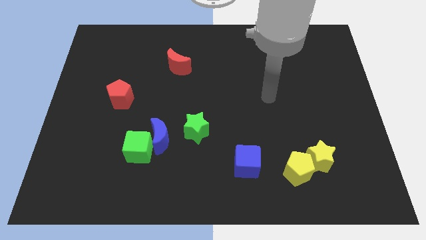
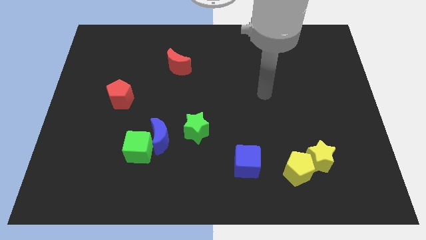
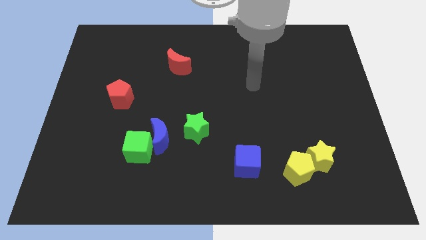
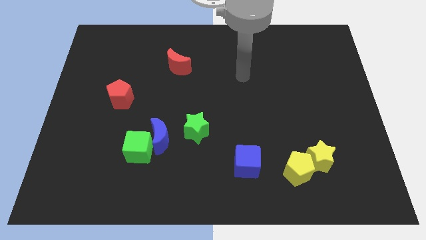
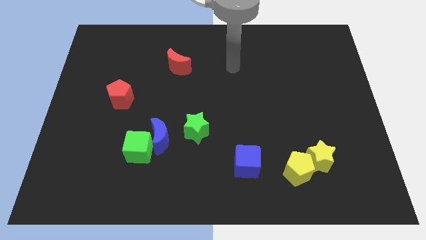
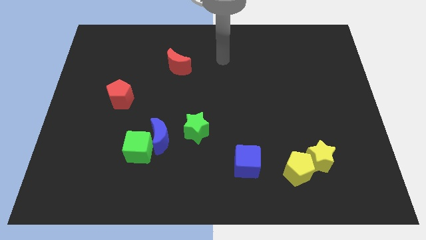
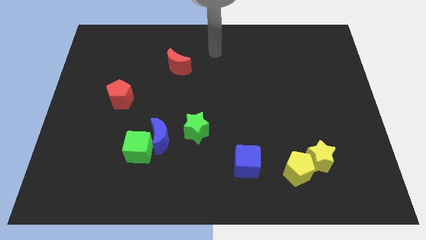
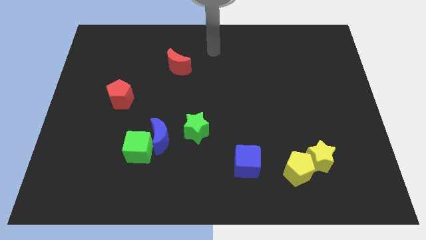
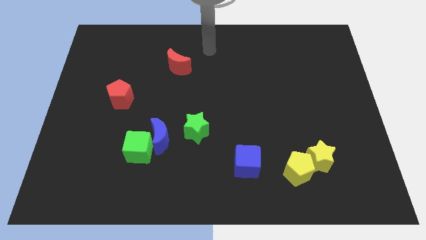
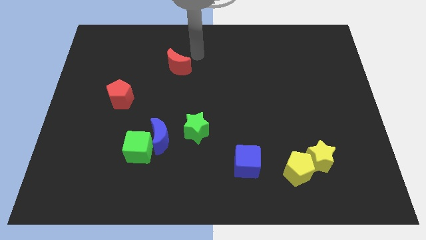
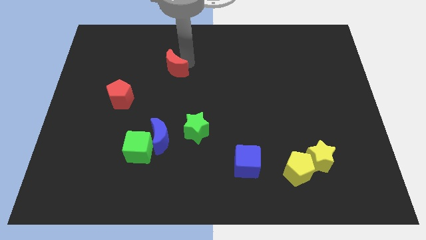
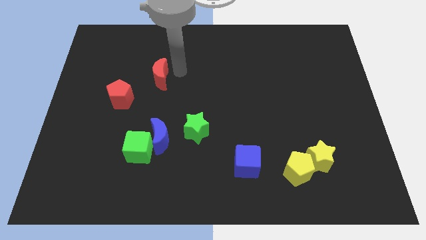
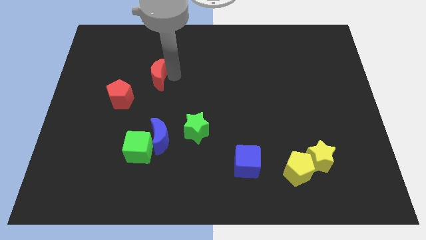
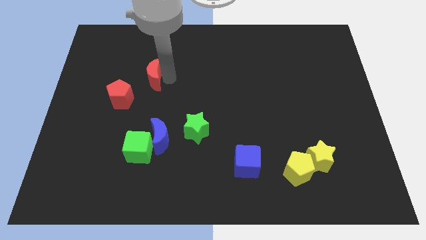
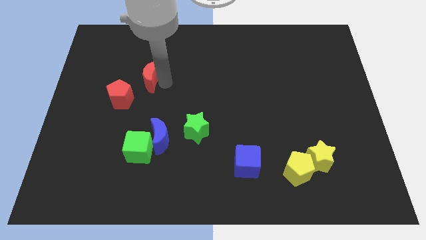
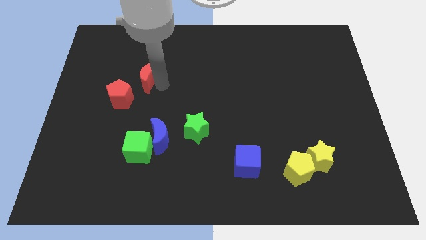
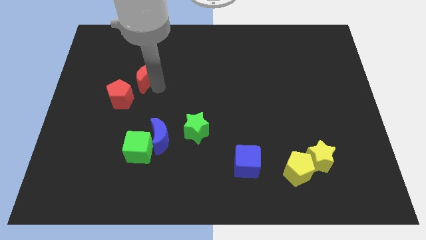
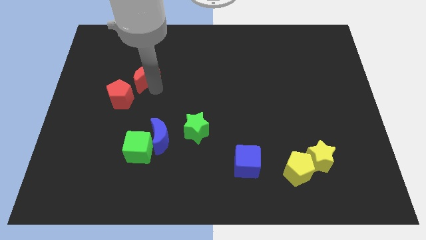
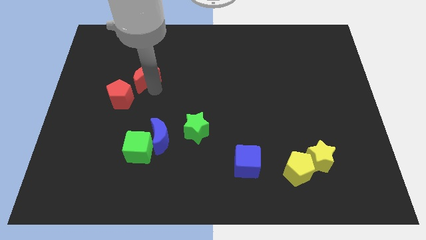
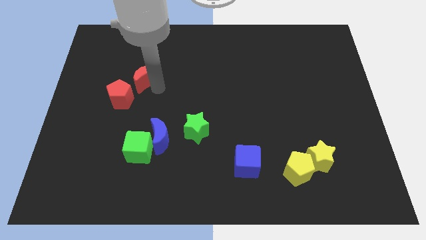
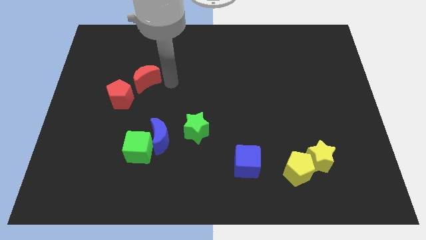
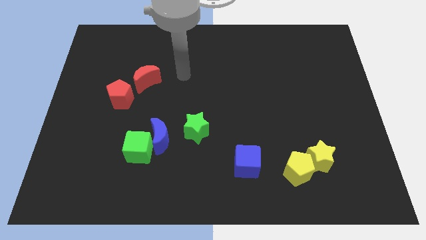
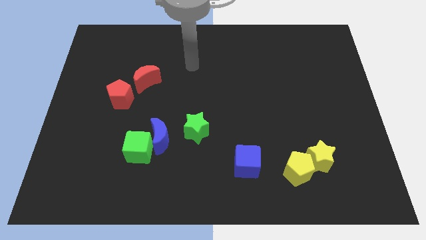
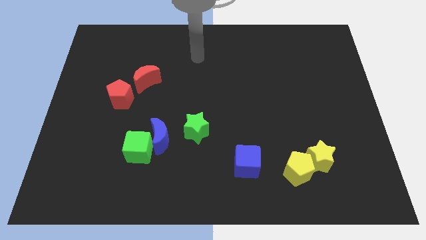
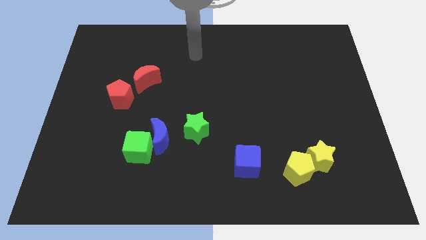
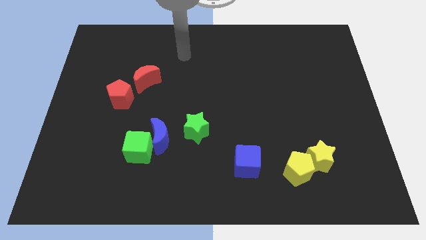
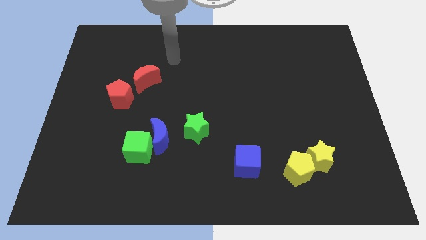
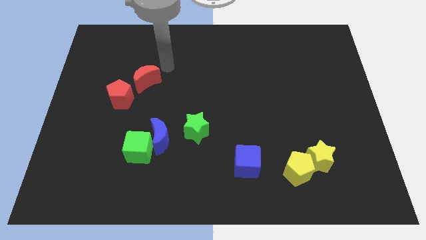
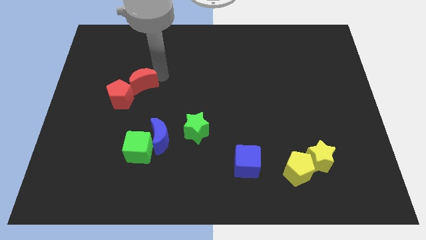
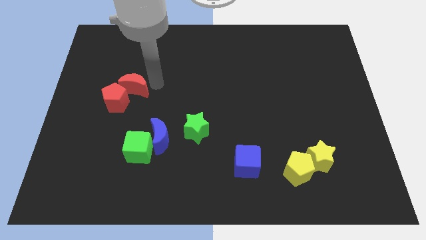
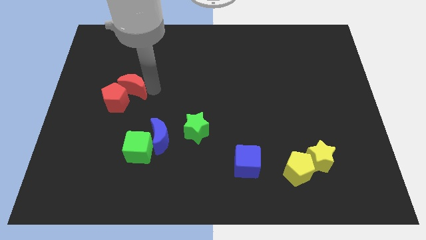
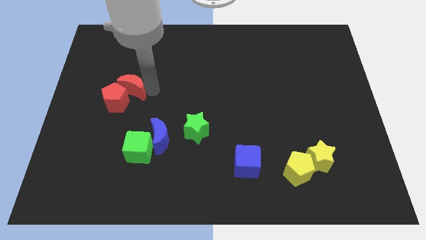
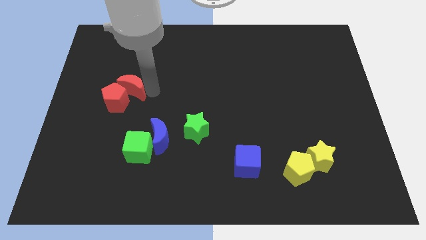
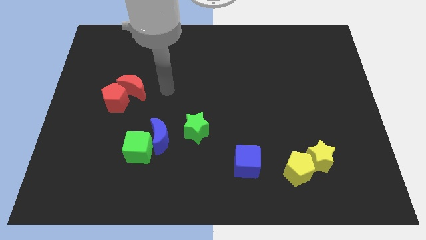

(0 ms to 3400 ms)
move the red crescent into the red pentagon

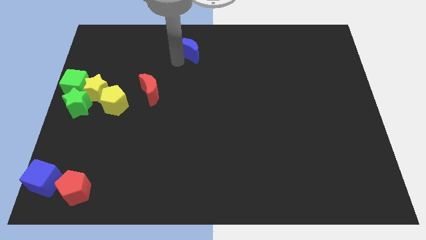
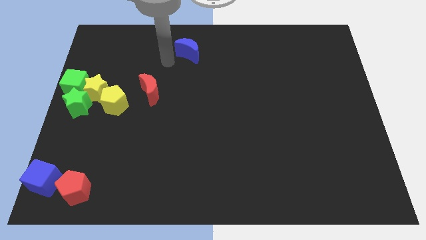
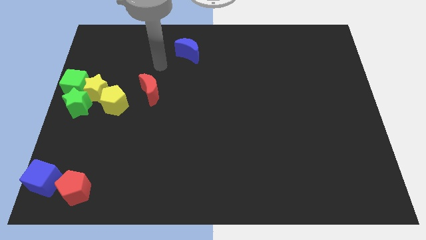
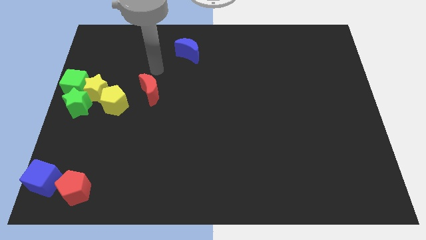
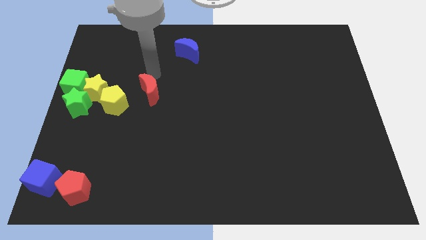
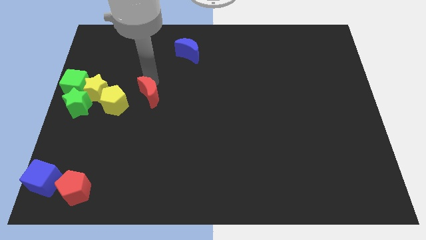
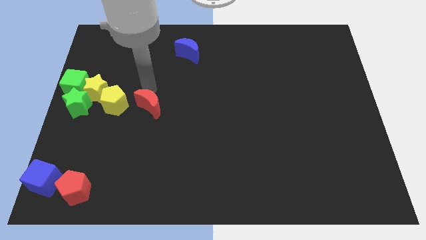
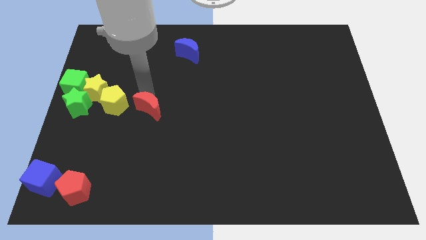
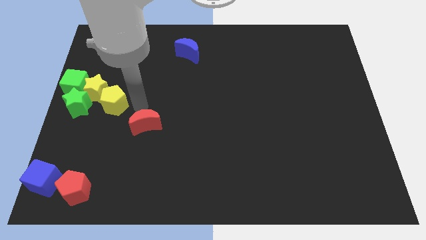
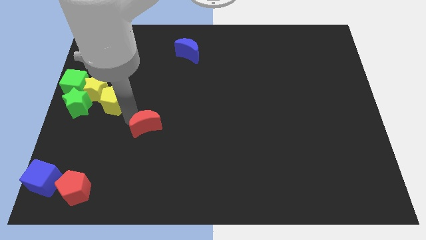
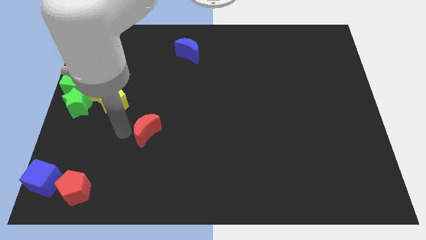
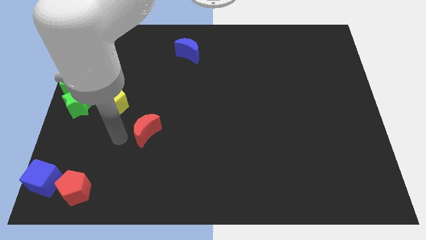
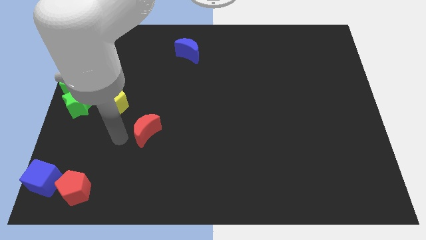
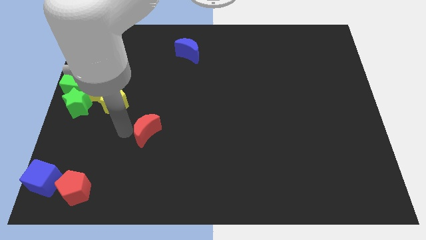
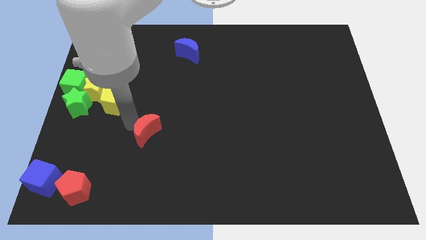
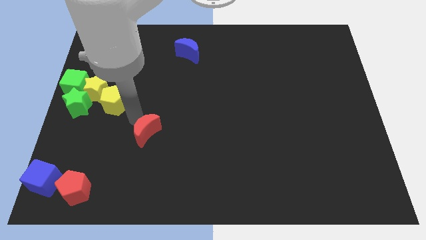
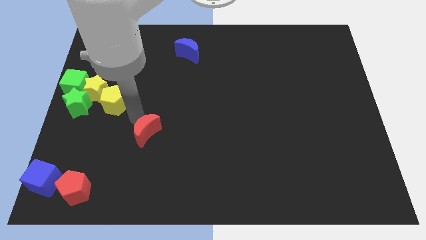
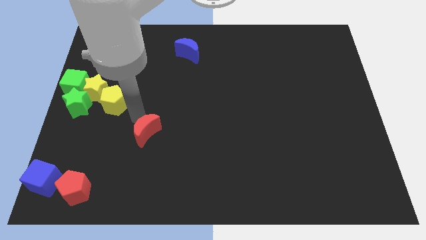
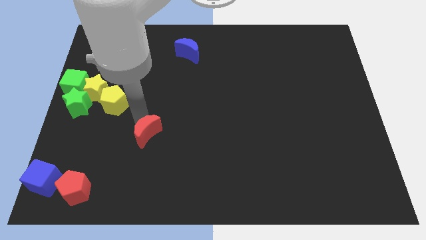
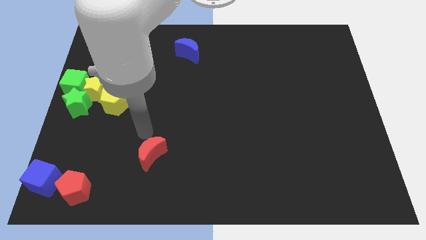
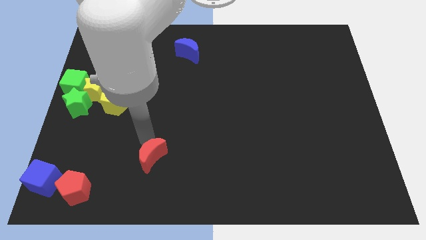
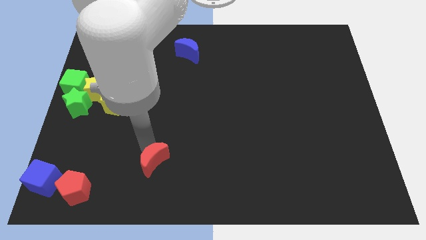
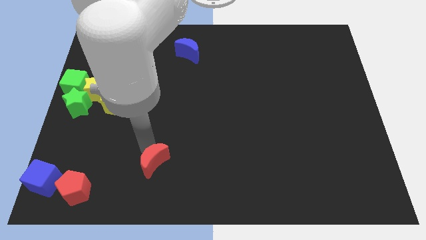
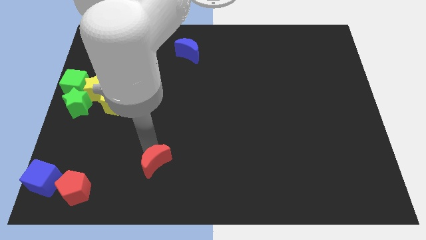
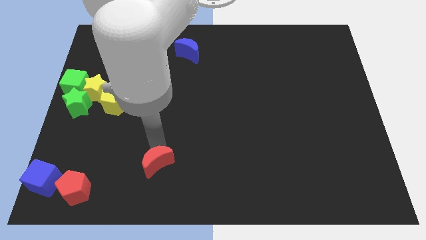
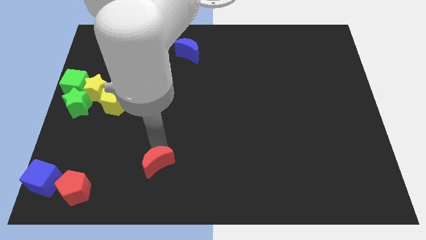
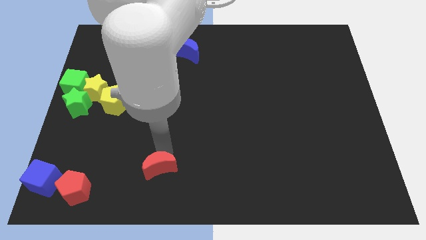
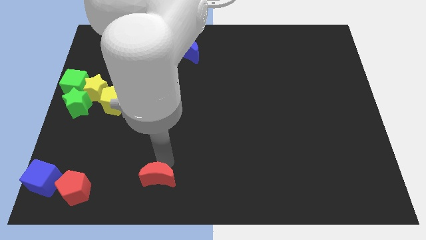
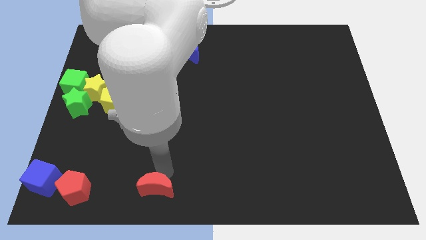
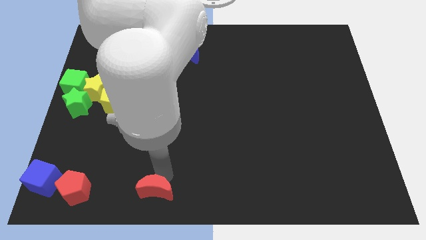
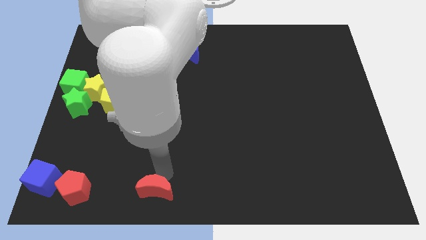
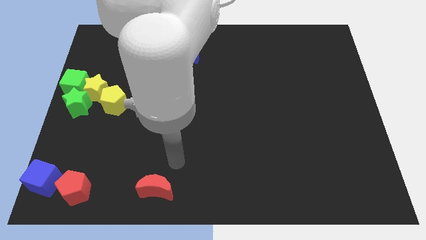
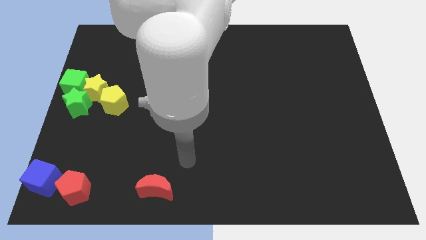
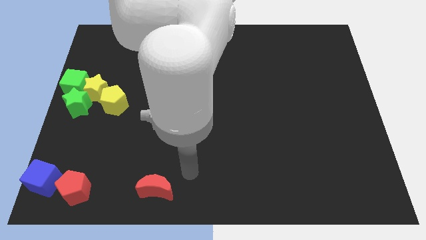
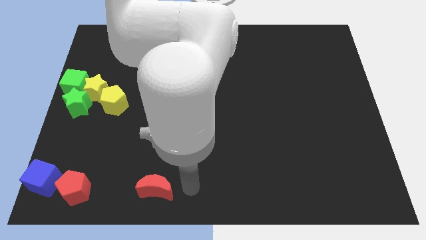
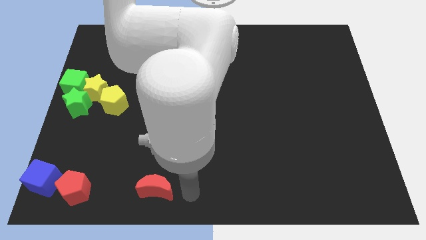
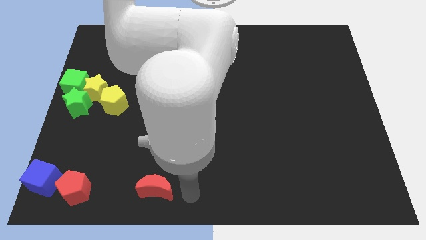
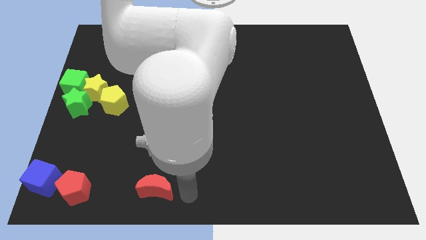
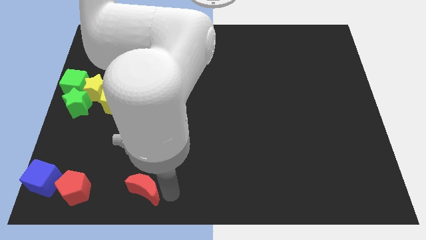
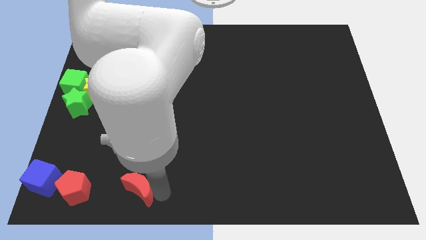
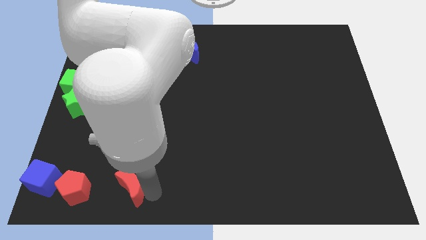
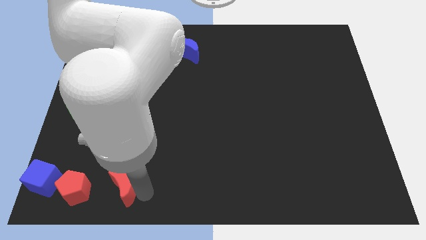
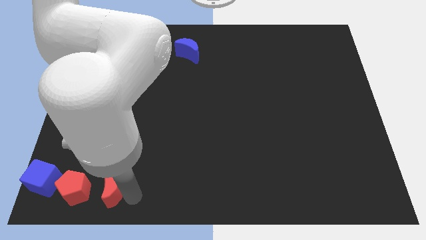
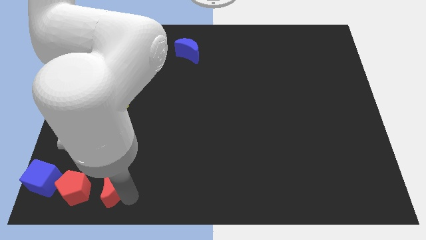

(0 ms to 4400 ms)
place the red moon to the right side of red pentagon

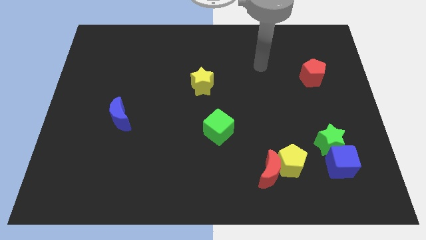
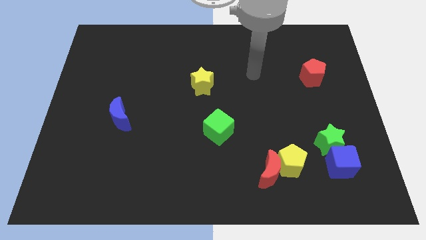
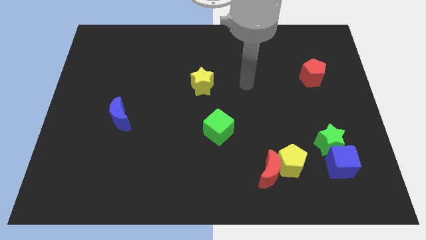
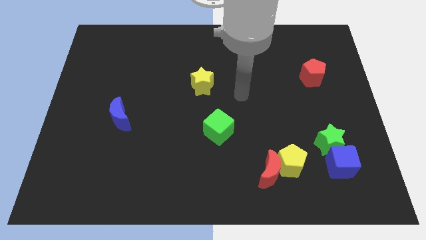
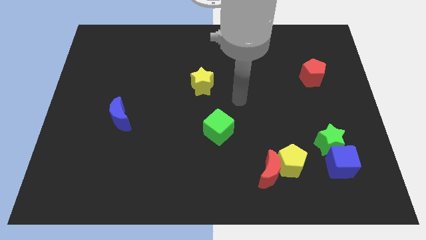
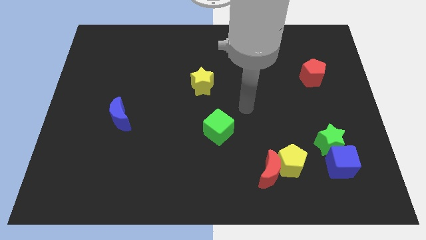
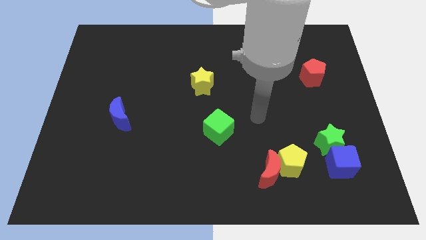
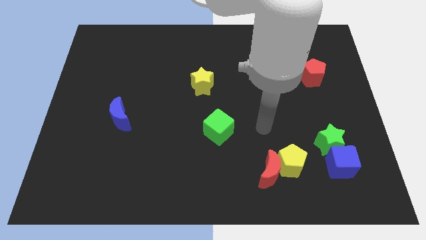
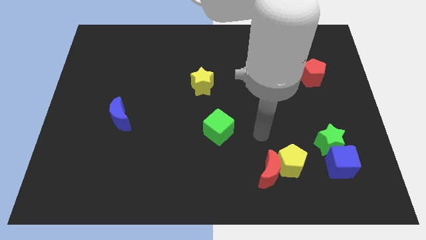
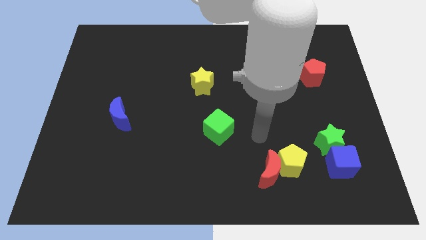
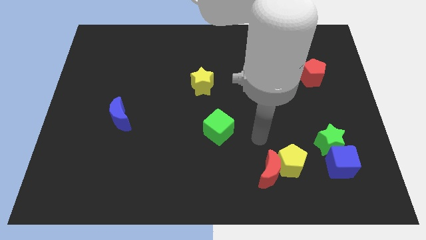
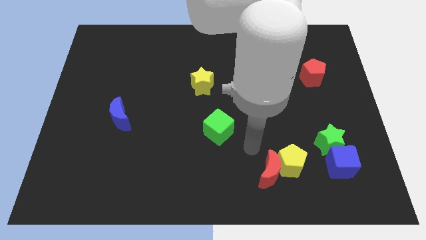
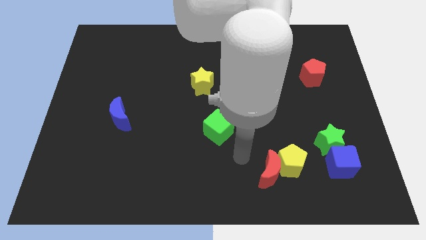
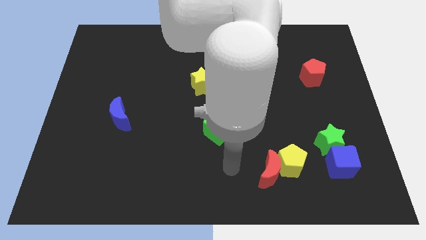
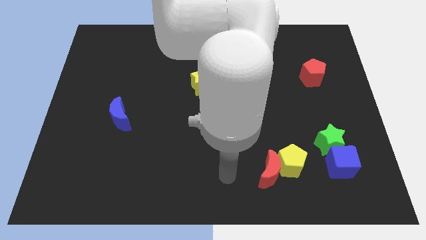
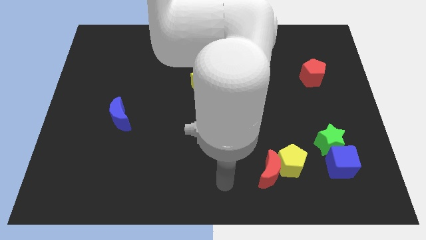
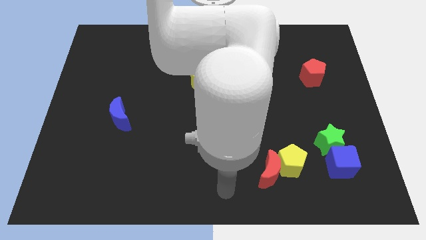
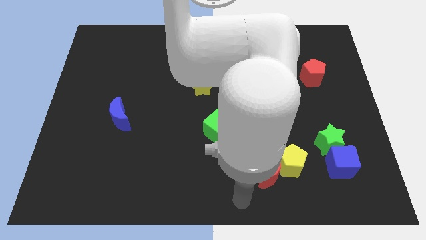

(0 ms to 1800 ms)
move your arm to the bottom center of the board
